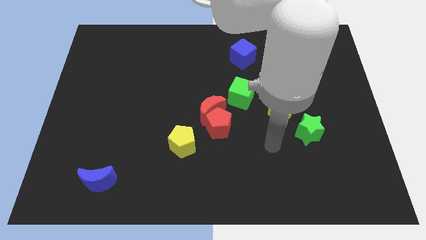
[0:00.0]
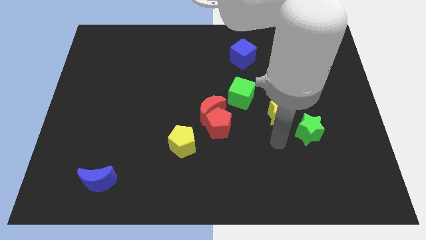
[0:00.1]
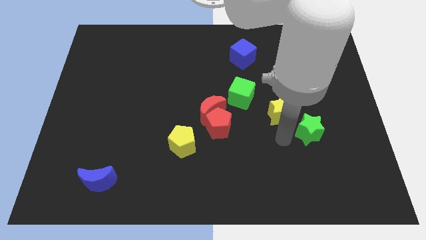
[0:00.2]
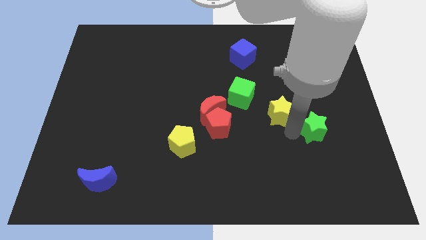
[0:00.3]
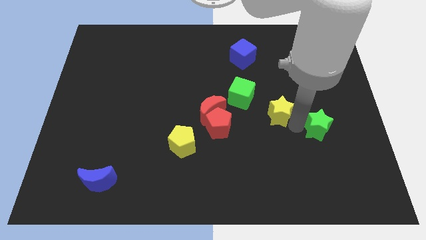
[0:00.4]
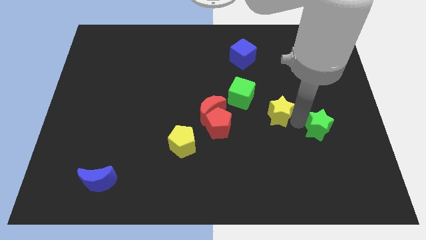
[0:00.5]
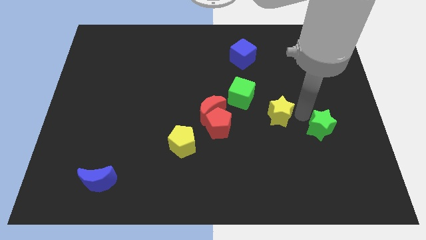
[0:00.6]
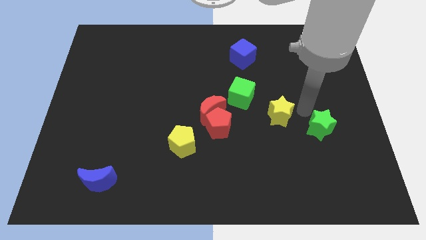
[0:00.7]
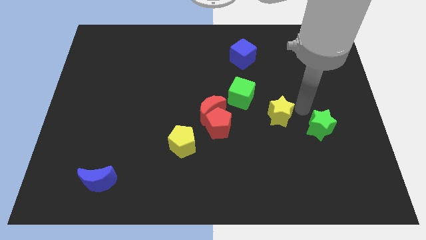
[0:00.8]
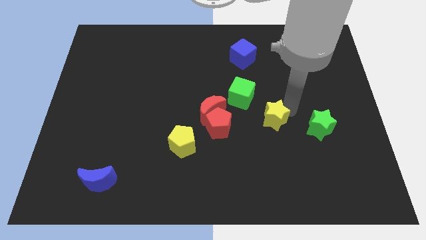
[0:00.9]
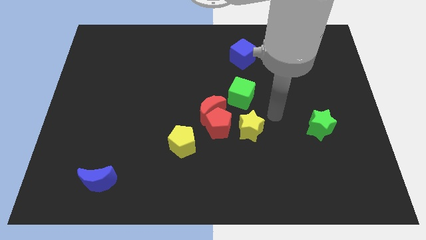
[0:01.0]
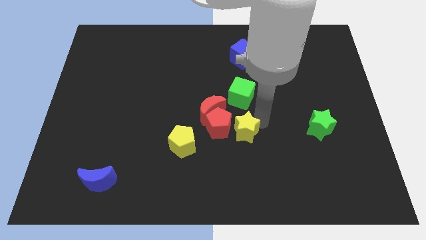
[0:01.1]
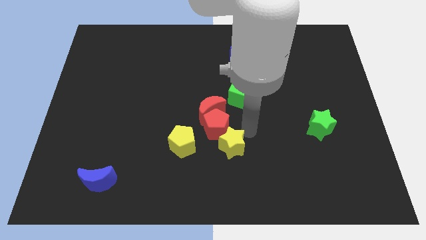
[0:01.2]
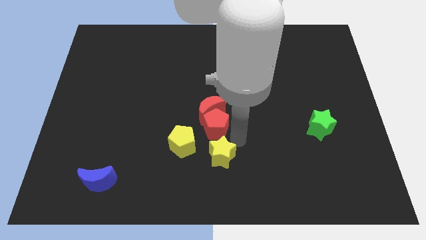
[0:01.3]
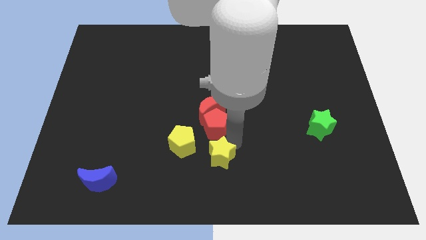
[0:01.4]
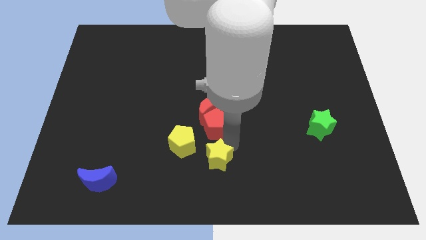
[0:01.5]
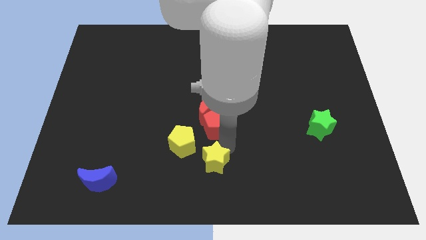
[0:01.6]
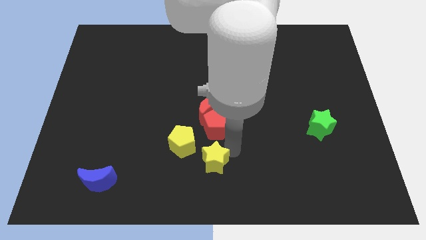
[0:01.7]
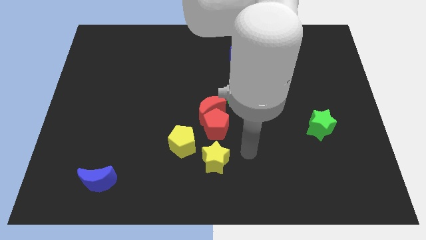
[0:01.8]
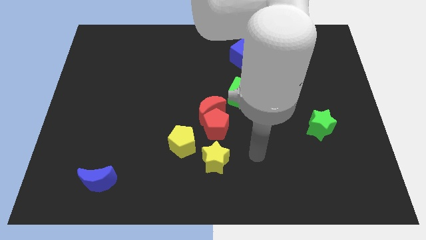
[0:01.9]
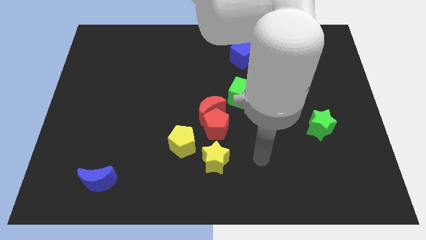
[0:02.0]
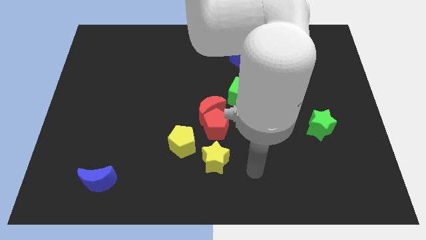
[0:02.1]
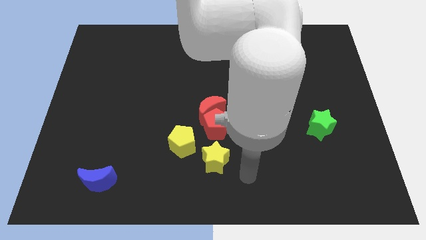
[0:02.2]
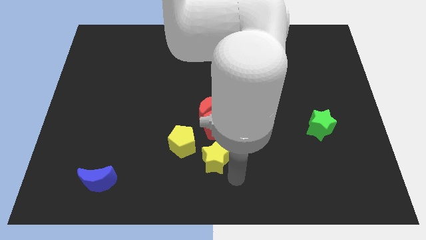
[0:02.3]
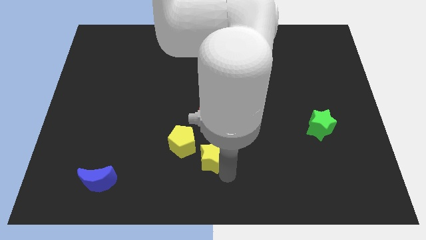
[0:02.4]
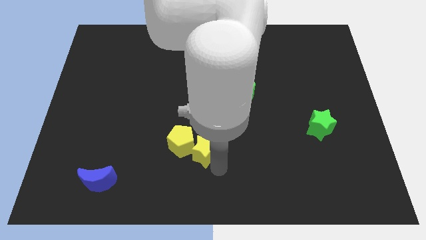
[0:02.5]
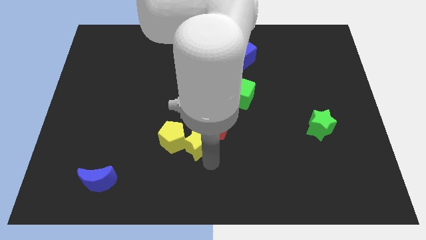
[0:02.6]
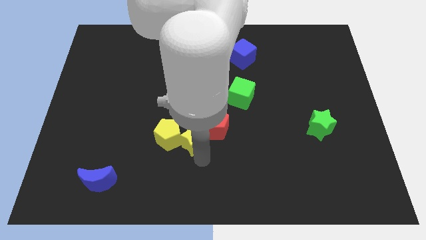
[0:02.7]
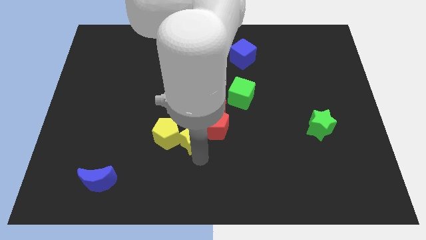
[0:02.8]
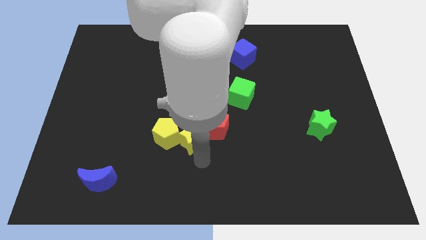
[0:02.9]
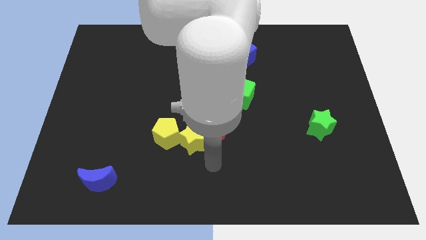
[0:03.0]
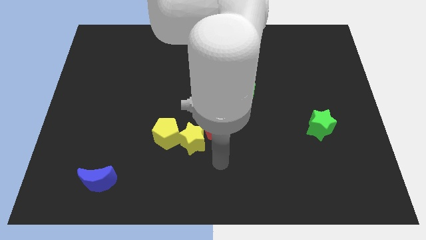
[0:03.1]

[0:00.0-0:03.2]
push the yellow star into the yellow pentagon

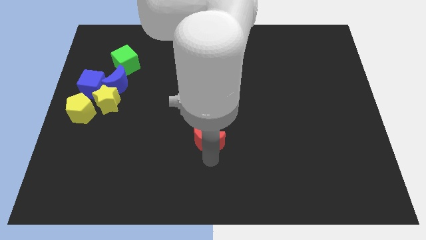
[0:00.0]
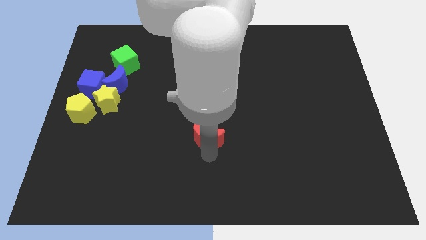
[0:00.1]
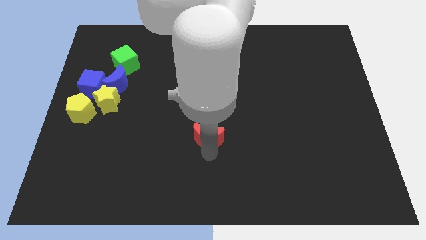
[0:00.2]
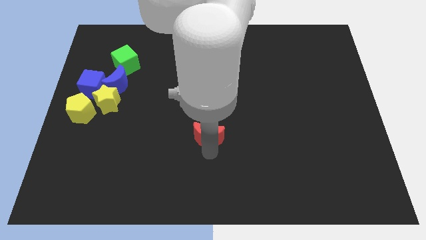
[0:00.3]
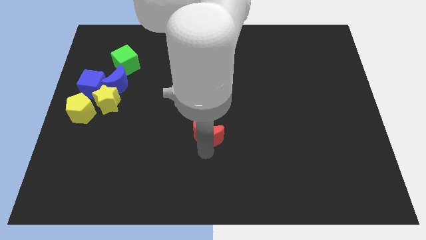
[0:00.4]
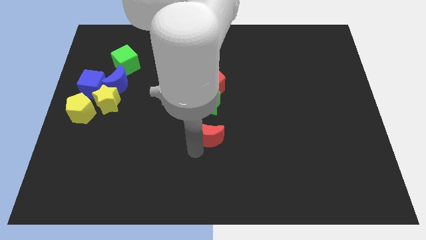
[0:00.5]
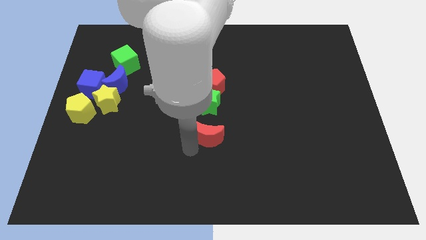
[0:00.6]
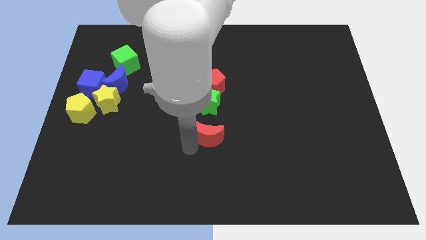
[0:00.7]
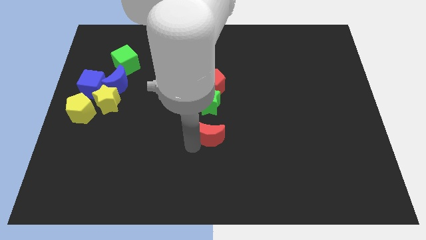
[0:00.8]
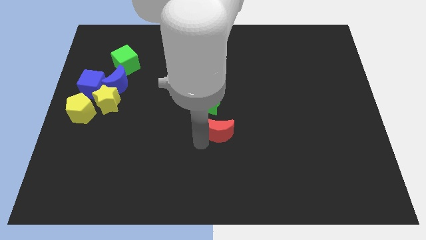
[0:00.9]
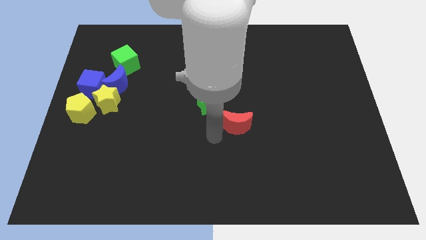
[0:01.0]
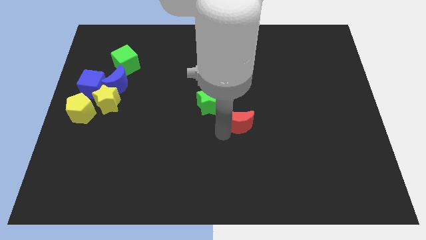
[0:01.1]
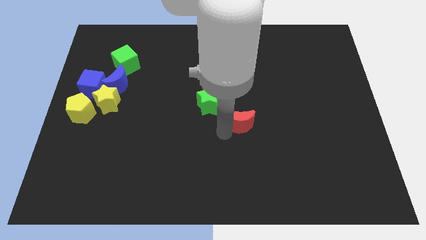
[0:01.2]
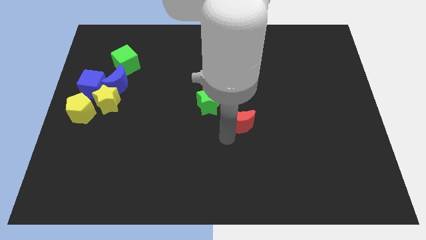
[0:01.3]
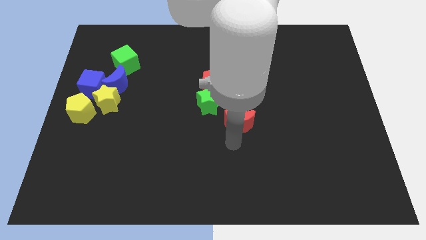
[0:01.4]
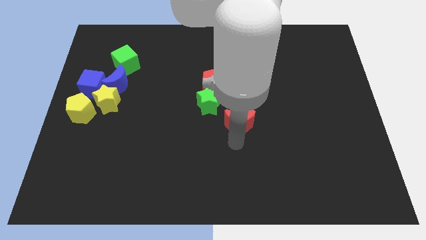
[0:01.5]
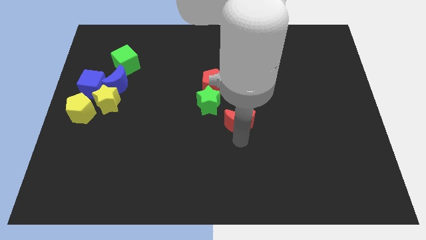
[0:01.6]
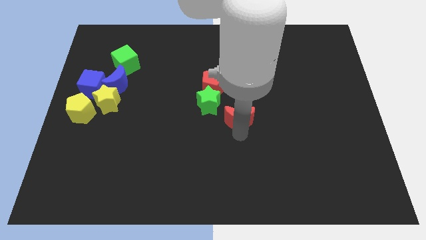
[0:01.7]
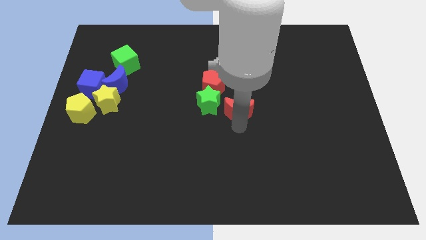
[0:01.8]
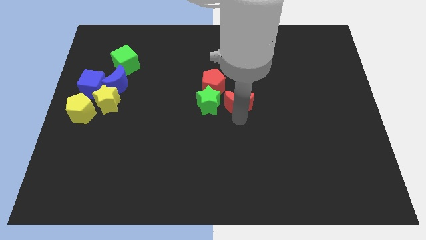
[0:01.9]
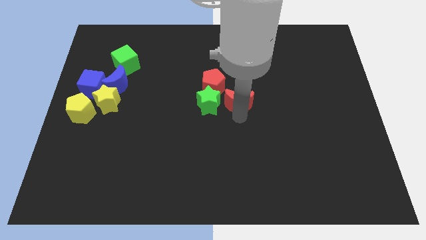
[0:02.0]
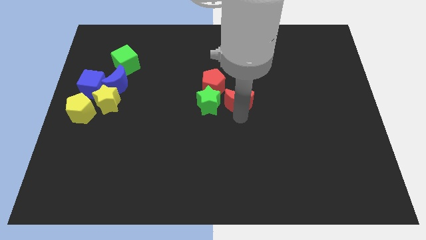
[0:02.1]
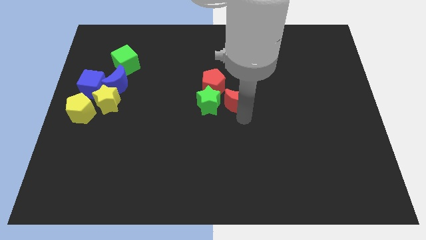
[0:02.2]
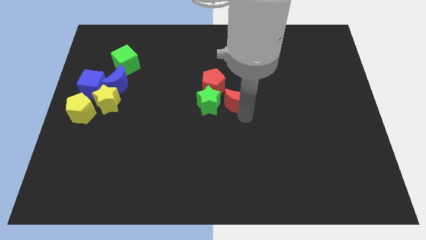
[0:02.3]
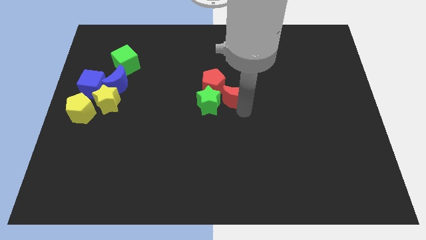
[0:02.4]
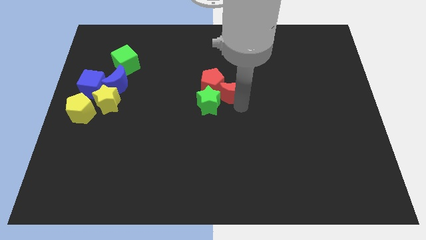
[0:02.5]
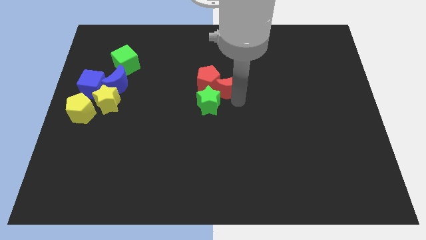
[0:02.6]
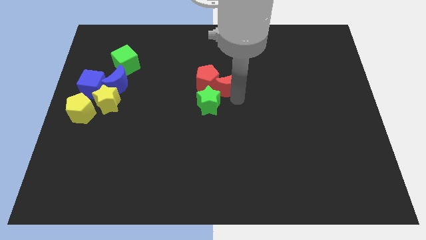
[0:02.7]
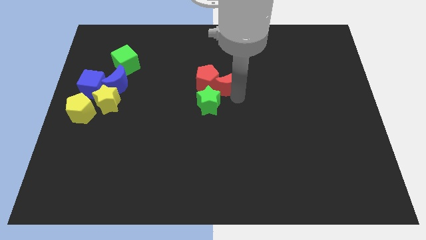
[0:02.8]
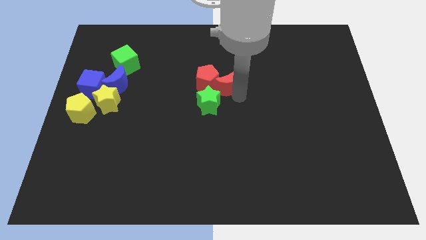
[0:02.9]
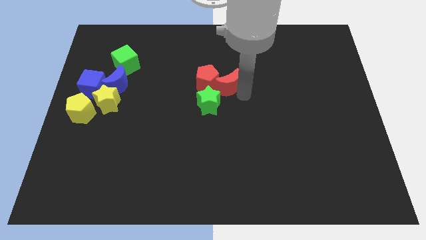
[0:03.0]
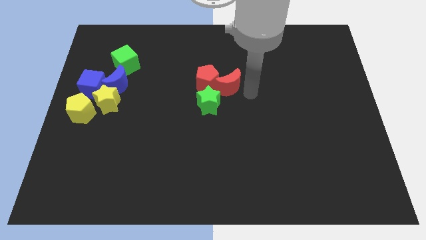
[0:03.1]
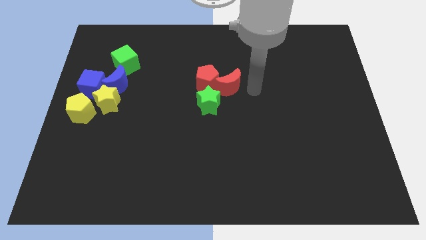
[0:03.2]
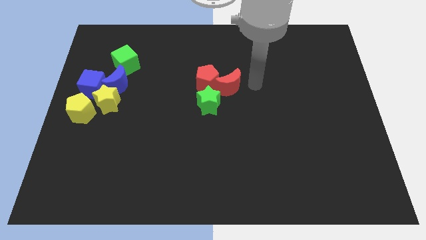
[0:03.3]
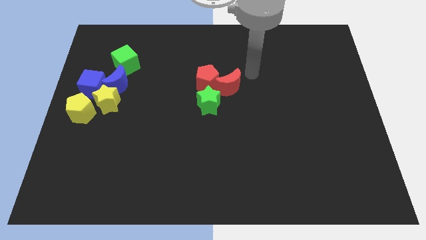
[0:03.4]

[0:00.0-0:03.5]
place the red moon to the bottom right of the red pentagon

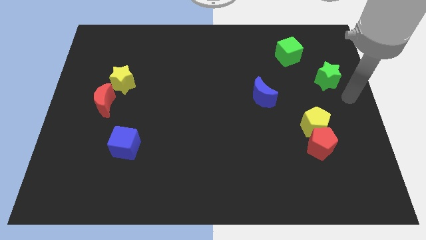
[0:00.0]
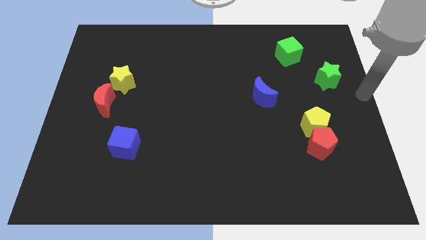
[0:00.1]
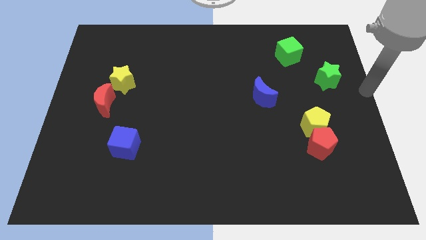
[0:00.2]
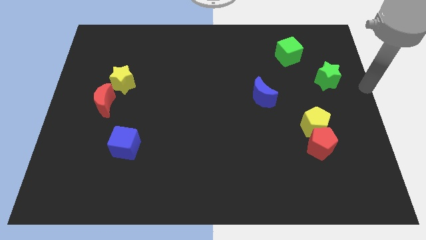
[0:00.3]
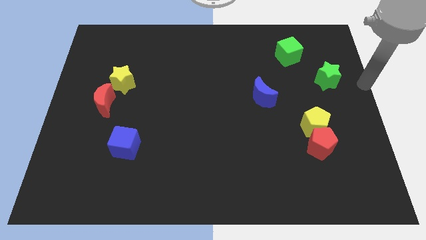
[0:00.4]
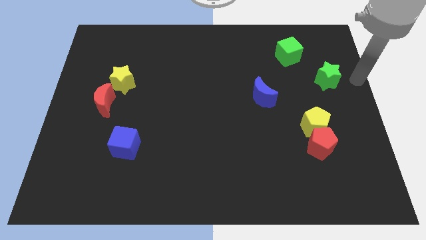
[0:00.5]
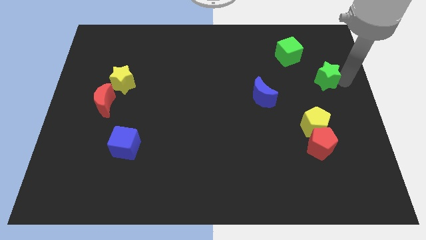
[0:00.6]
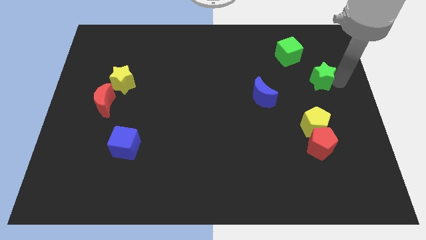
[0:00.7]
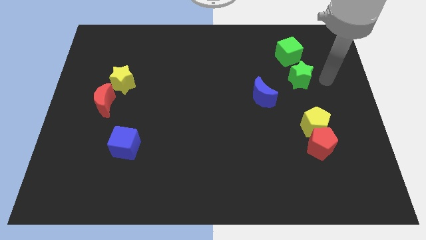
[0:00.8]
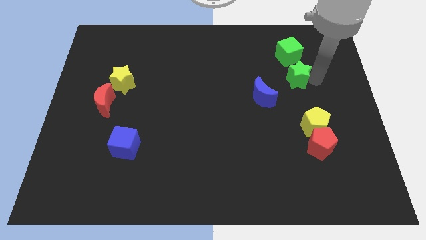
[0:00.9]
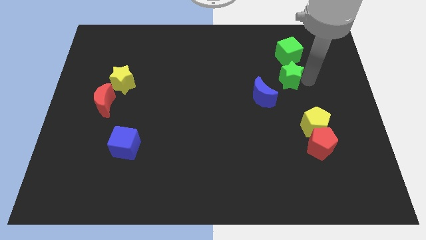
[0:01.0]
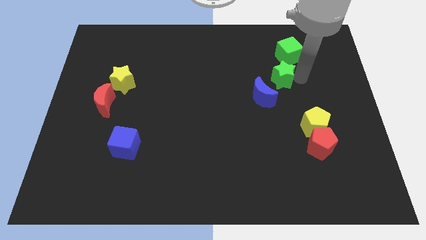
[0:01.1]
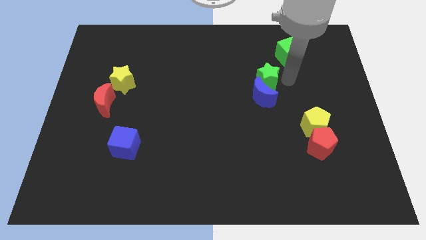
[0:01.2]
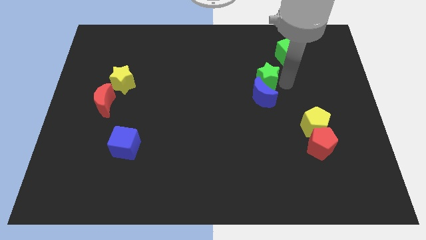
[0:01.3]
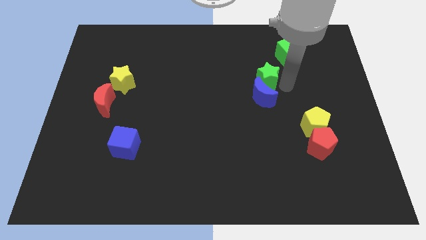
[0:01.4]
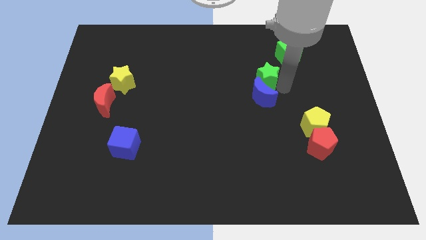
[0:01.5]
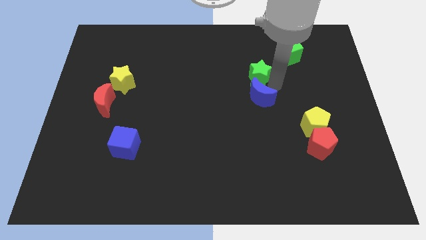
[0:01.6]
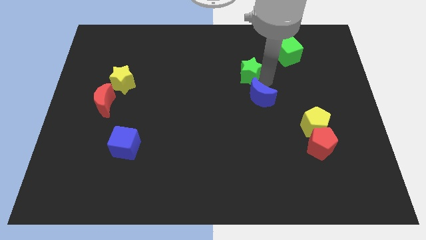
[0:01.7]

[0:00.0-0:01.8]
push the green star into the blue moon

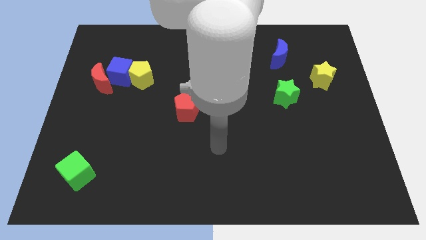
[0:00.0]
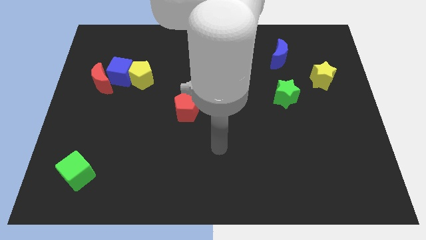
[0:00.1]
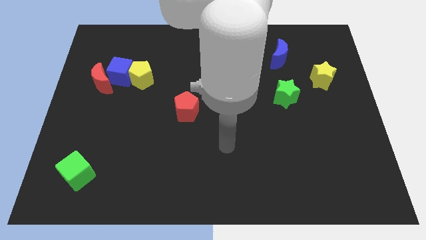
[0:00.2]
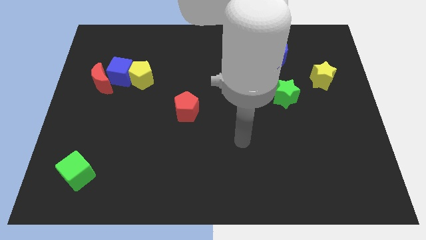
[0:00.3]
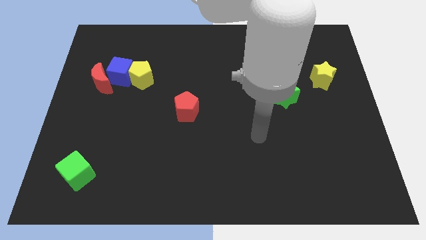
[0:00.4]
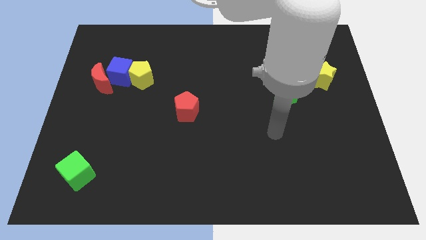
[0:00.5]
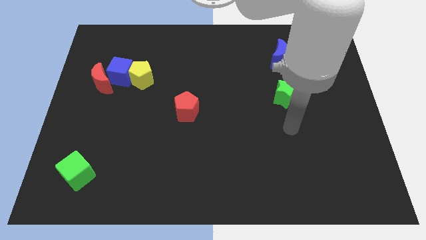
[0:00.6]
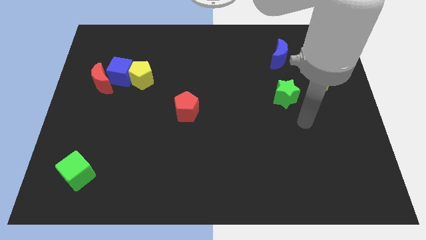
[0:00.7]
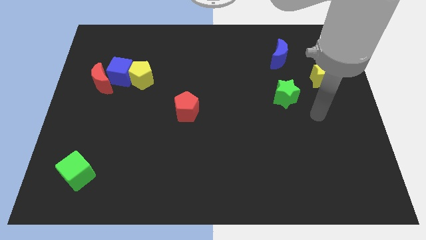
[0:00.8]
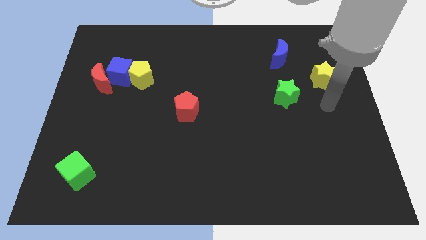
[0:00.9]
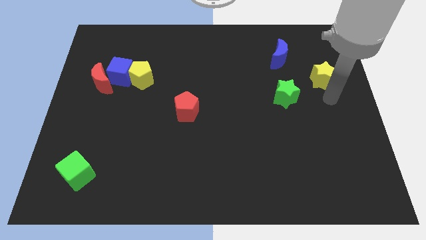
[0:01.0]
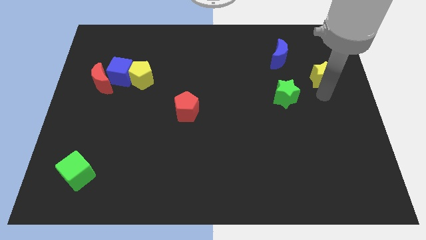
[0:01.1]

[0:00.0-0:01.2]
put your hand vertically below the yellow star
